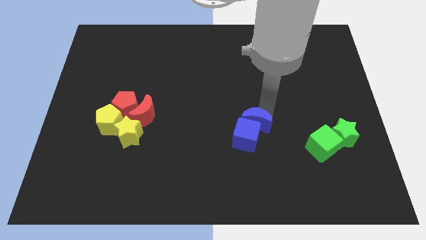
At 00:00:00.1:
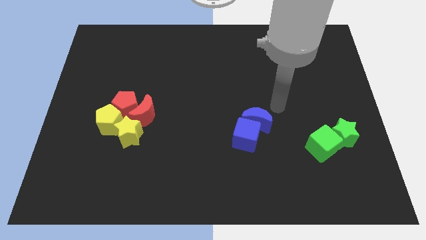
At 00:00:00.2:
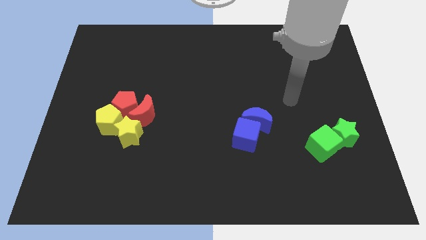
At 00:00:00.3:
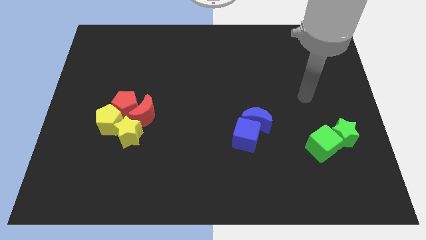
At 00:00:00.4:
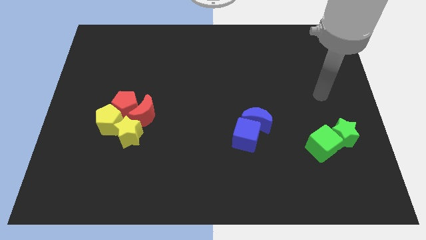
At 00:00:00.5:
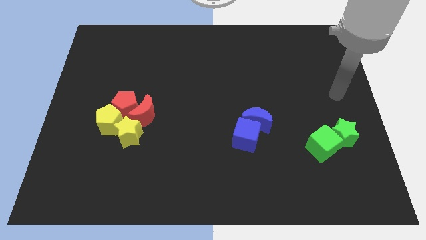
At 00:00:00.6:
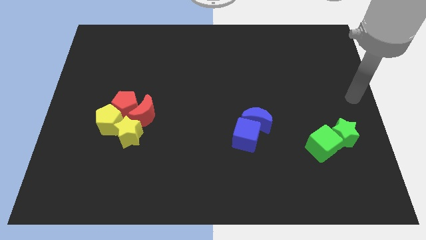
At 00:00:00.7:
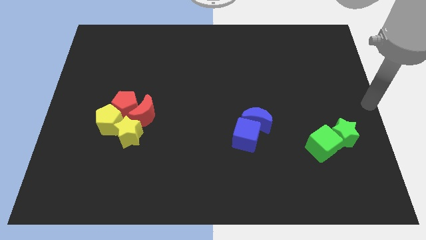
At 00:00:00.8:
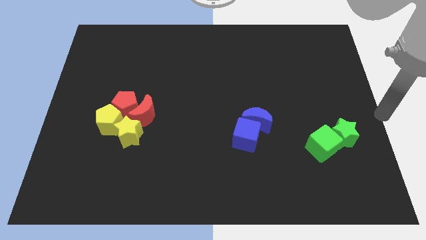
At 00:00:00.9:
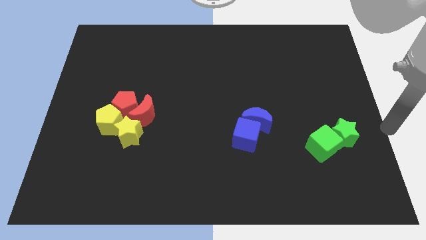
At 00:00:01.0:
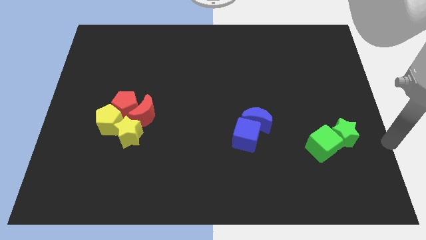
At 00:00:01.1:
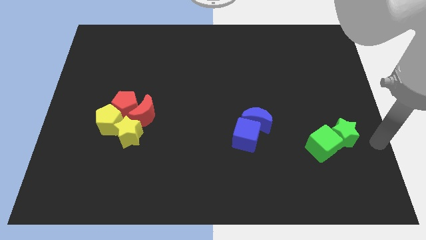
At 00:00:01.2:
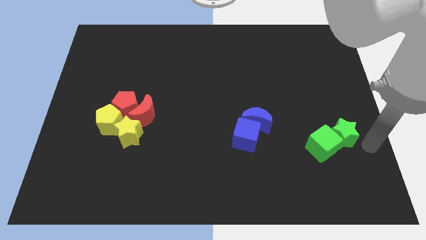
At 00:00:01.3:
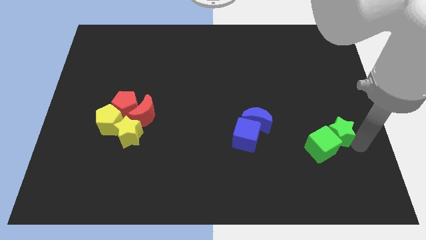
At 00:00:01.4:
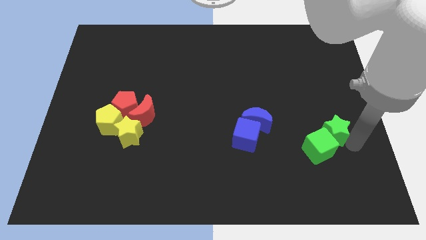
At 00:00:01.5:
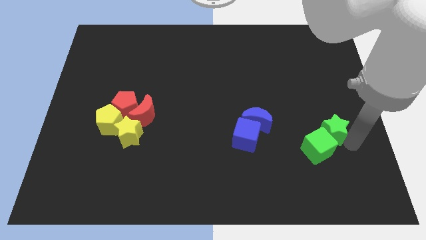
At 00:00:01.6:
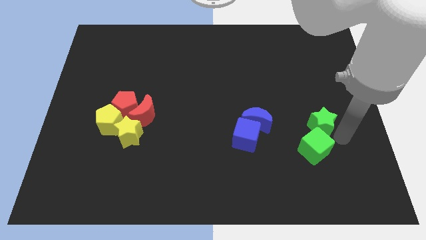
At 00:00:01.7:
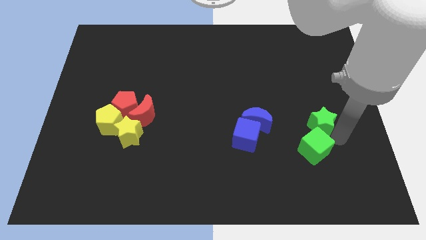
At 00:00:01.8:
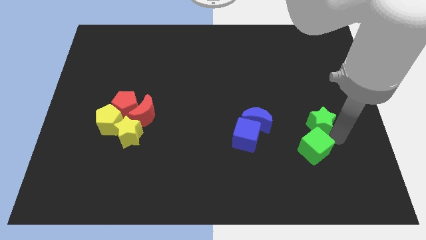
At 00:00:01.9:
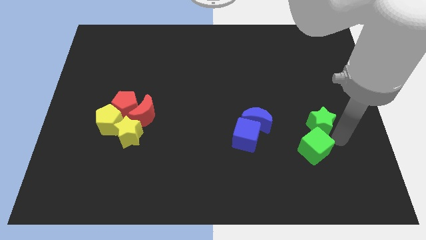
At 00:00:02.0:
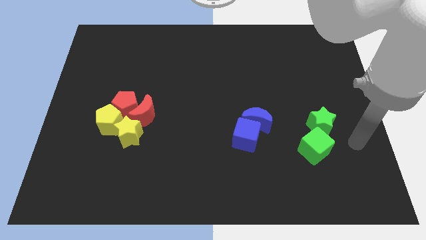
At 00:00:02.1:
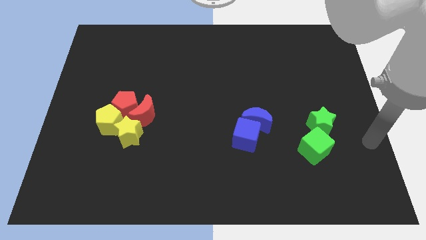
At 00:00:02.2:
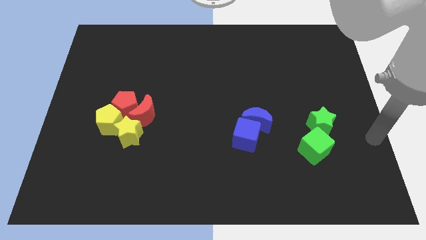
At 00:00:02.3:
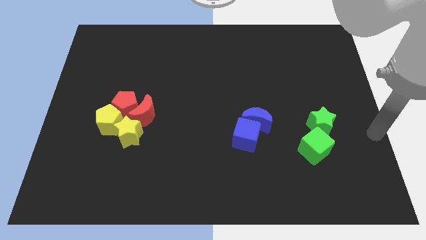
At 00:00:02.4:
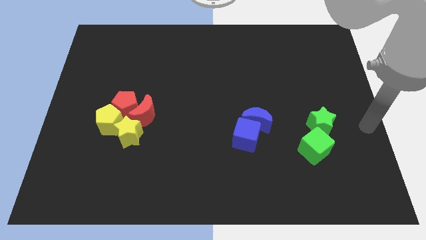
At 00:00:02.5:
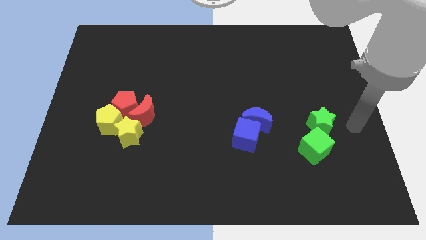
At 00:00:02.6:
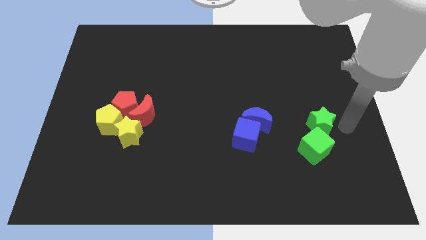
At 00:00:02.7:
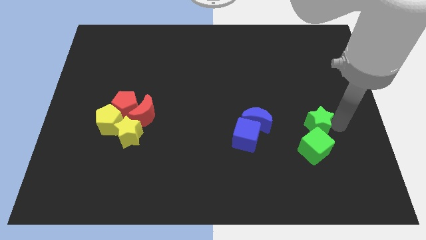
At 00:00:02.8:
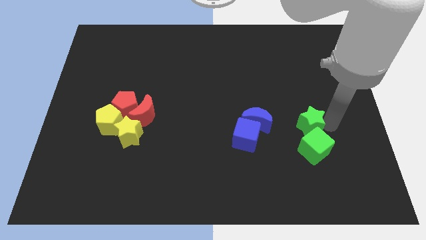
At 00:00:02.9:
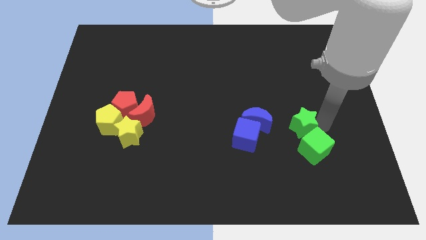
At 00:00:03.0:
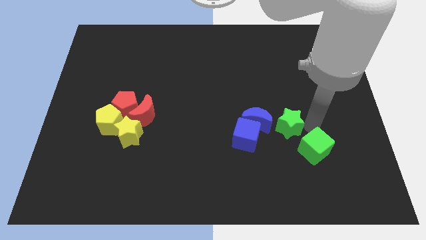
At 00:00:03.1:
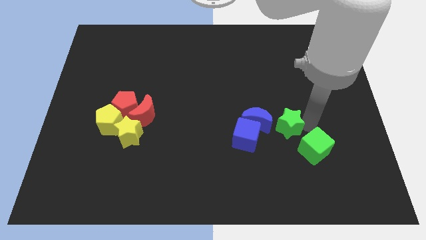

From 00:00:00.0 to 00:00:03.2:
separate the green star from the green cube

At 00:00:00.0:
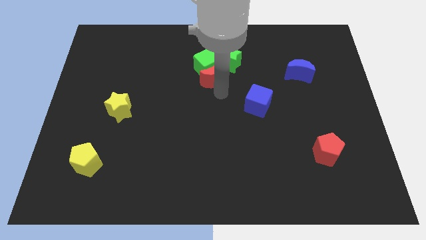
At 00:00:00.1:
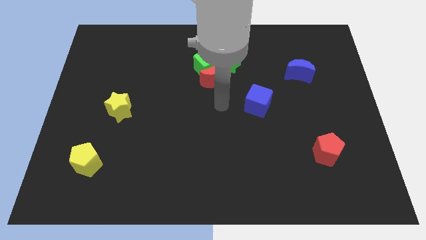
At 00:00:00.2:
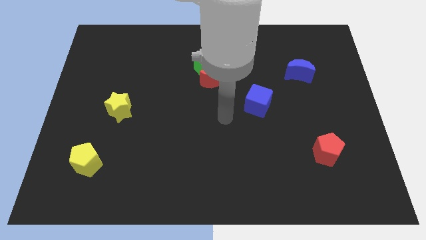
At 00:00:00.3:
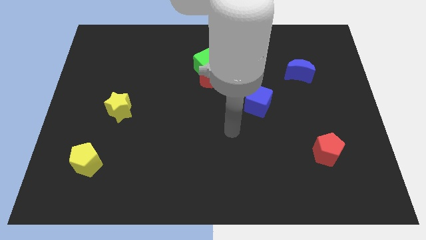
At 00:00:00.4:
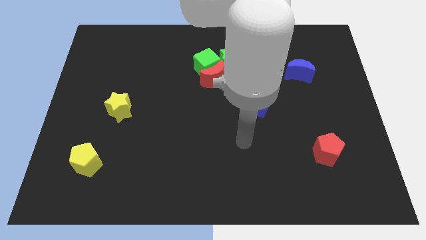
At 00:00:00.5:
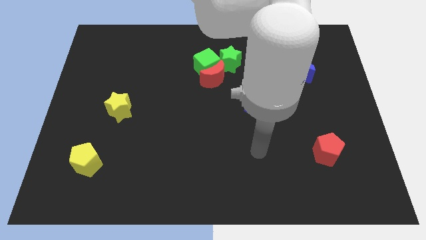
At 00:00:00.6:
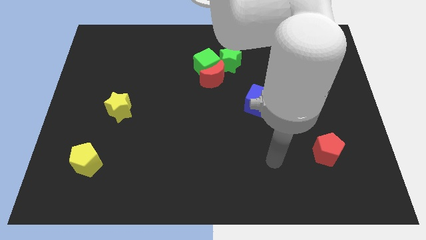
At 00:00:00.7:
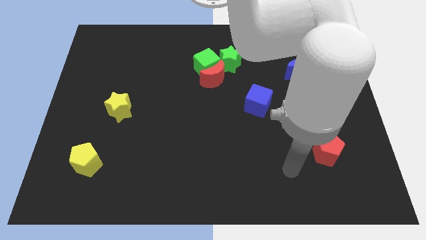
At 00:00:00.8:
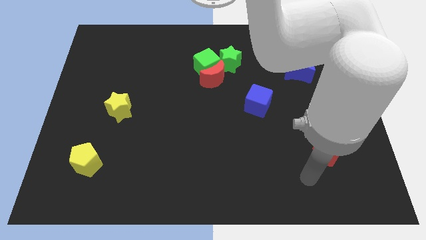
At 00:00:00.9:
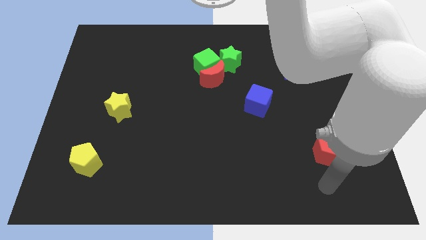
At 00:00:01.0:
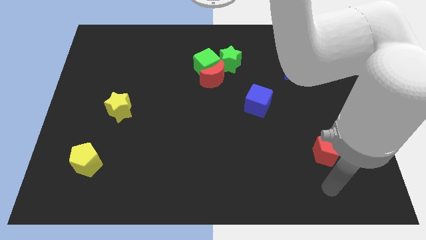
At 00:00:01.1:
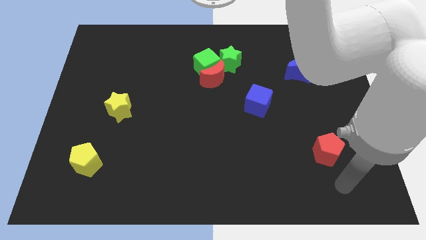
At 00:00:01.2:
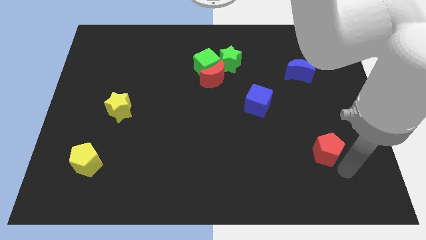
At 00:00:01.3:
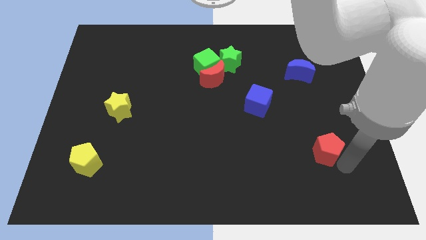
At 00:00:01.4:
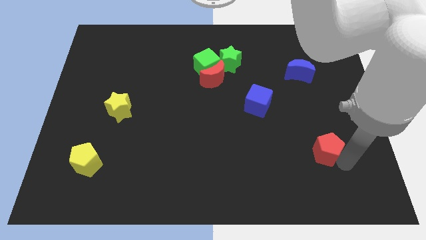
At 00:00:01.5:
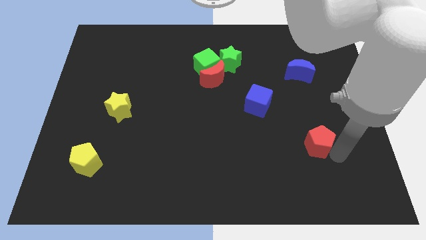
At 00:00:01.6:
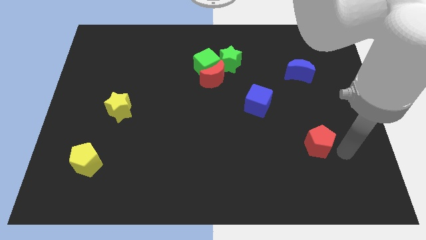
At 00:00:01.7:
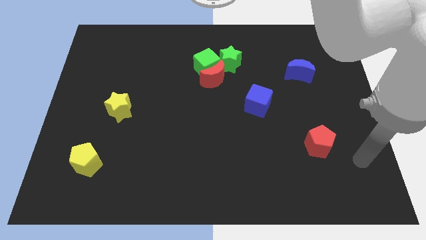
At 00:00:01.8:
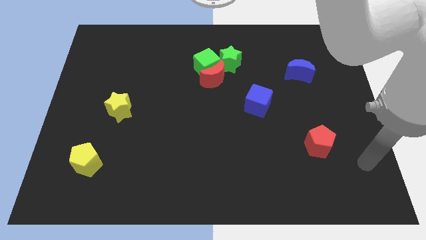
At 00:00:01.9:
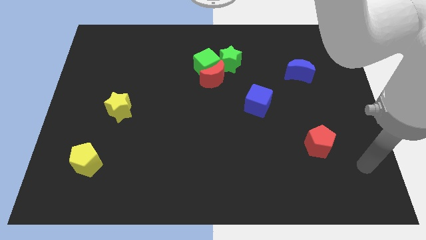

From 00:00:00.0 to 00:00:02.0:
move your arm towards the red pentagon

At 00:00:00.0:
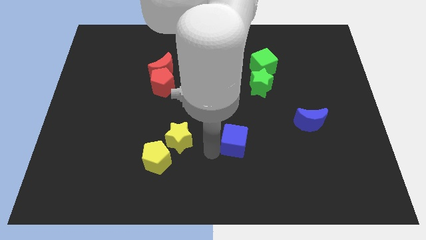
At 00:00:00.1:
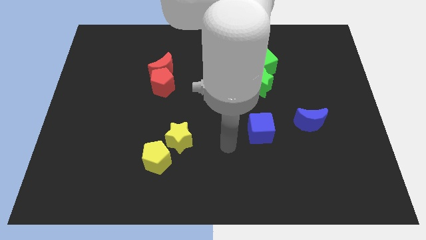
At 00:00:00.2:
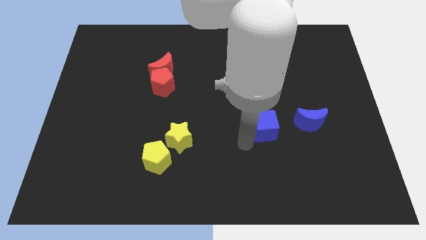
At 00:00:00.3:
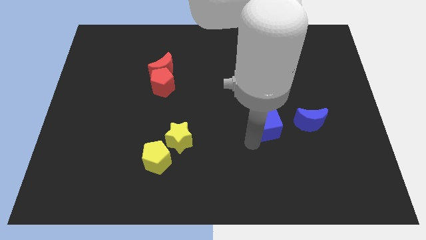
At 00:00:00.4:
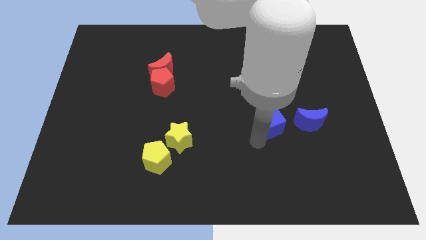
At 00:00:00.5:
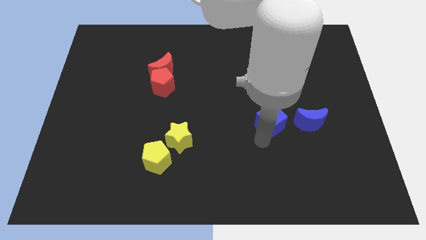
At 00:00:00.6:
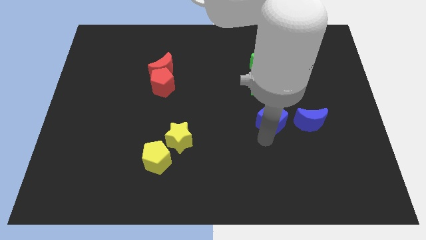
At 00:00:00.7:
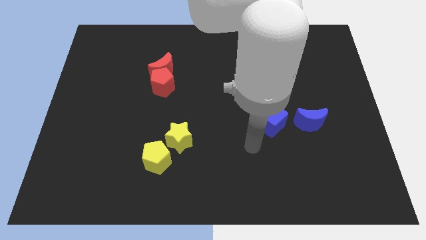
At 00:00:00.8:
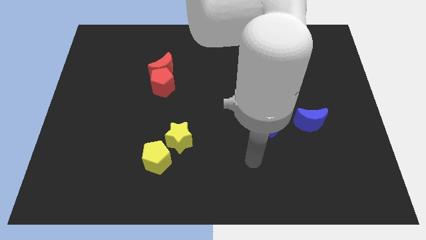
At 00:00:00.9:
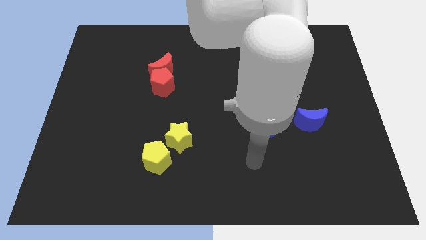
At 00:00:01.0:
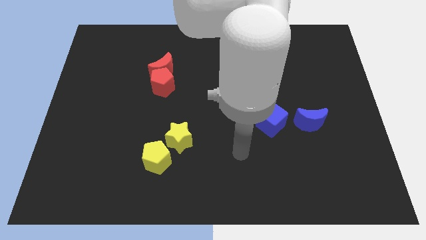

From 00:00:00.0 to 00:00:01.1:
push the blue cube to the left of blue crescent

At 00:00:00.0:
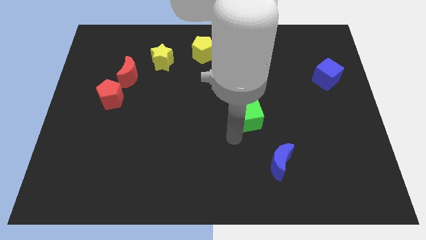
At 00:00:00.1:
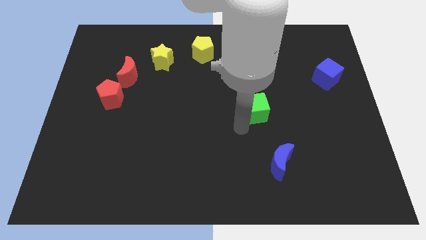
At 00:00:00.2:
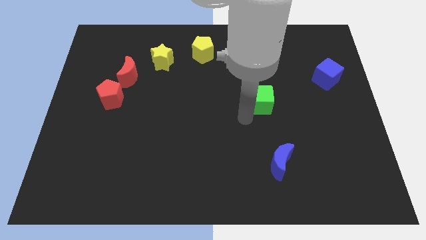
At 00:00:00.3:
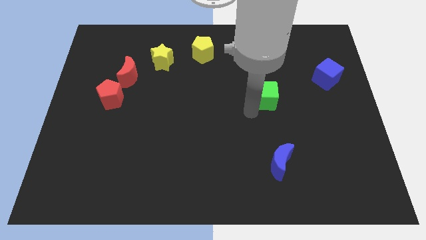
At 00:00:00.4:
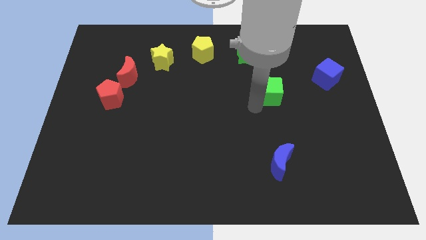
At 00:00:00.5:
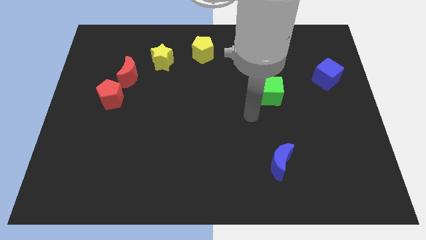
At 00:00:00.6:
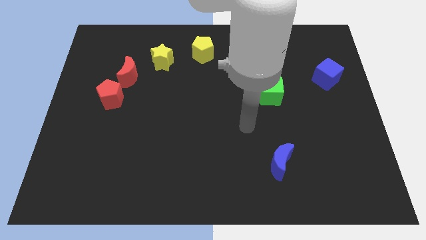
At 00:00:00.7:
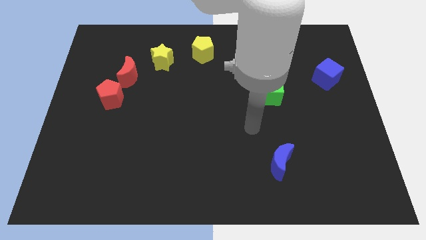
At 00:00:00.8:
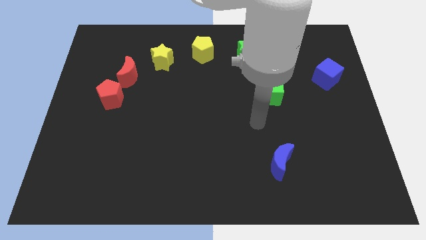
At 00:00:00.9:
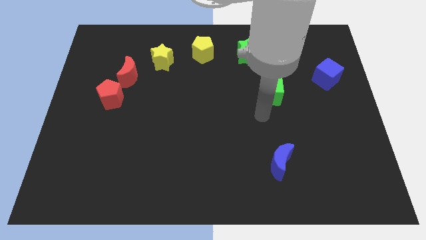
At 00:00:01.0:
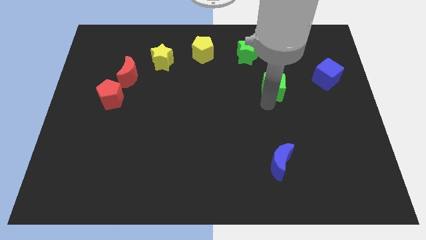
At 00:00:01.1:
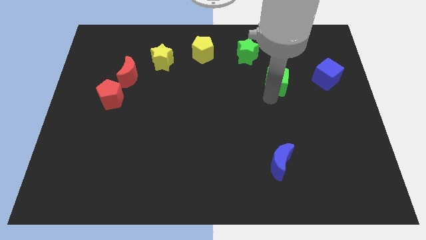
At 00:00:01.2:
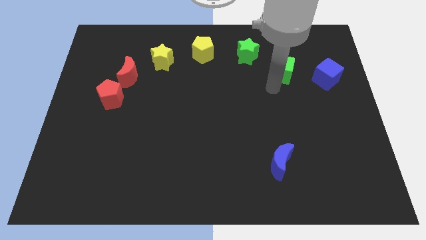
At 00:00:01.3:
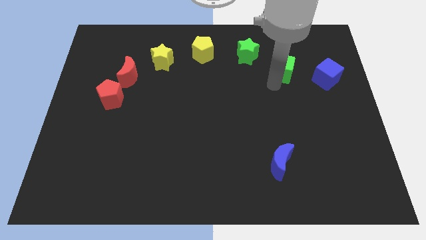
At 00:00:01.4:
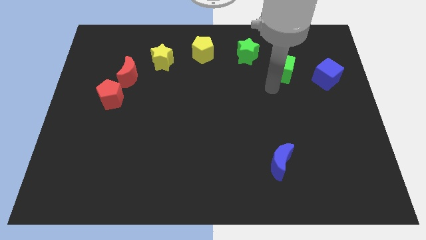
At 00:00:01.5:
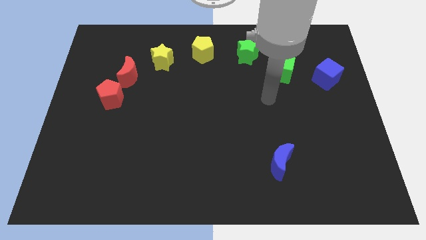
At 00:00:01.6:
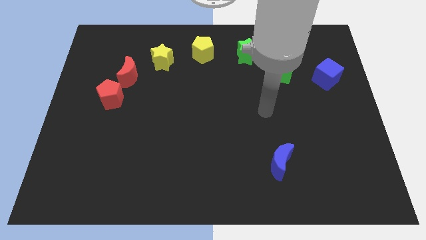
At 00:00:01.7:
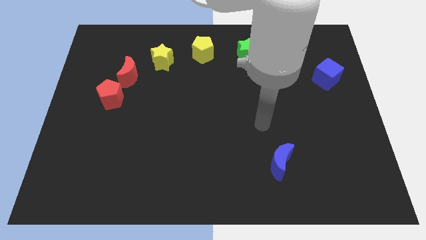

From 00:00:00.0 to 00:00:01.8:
move green cube between green star and blue cube

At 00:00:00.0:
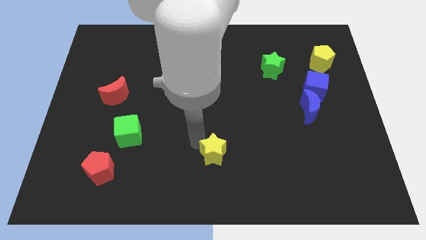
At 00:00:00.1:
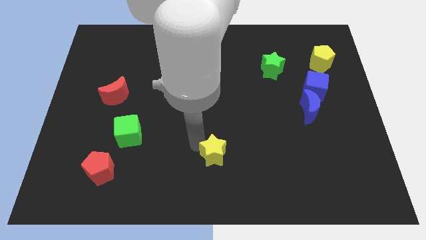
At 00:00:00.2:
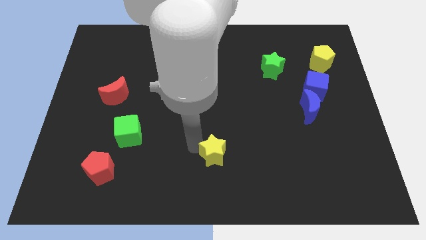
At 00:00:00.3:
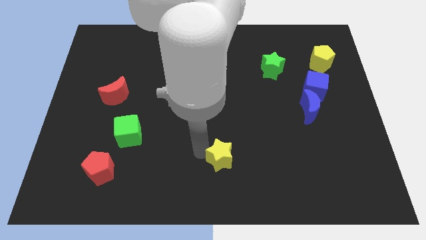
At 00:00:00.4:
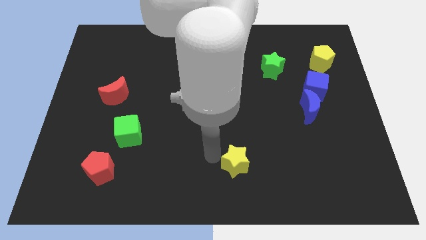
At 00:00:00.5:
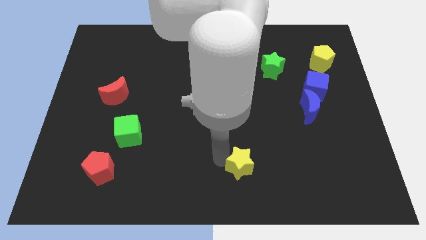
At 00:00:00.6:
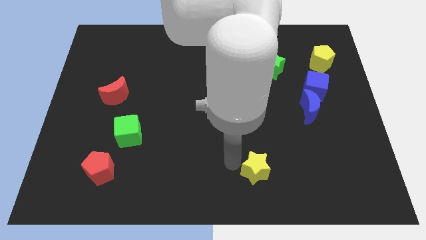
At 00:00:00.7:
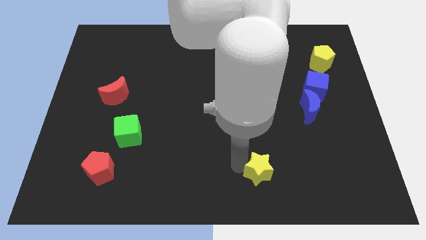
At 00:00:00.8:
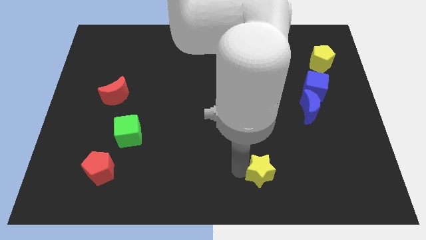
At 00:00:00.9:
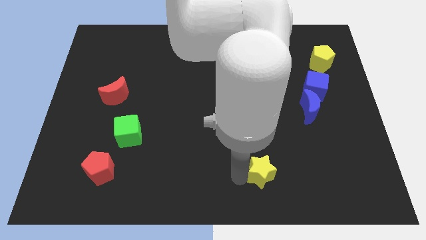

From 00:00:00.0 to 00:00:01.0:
push yellow star to bottom center
